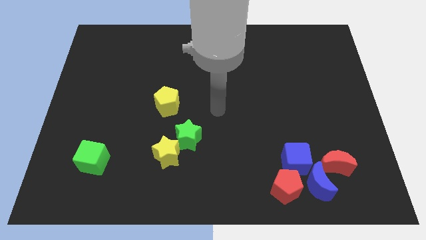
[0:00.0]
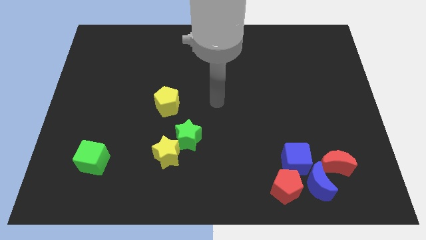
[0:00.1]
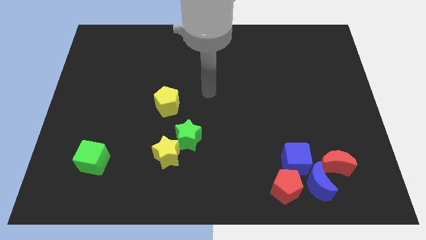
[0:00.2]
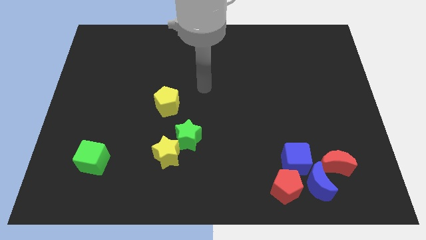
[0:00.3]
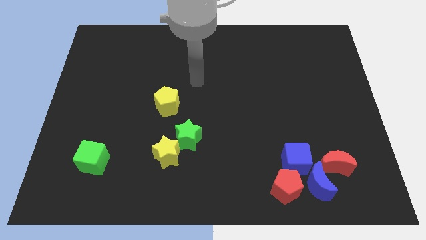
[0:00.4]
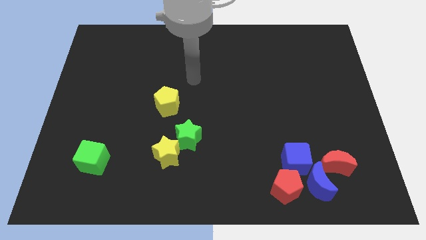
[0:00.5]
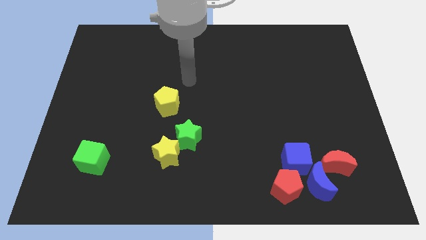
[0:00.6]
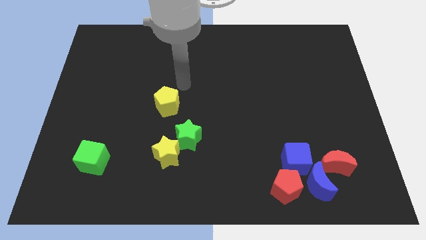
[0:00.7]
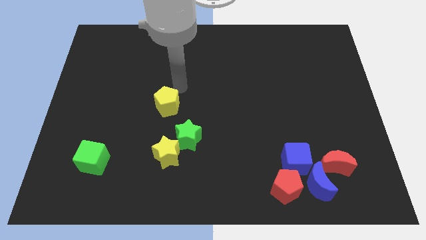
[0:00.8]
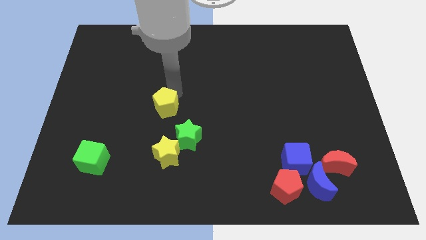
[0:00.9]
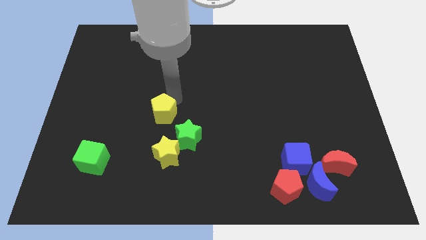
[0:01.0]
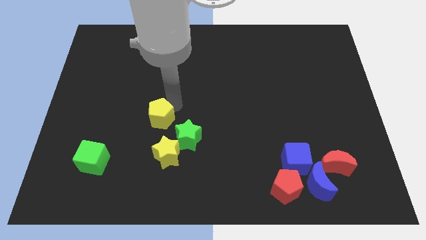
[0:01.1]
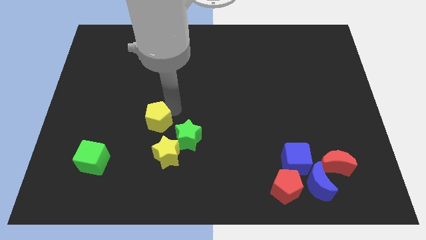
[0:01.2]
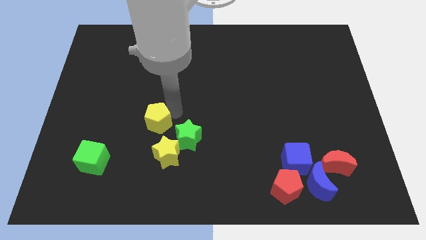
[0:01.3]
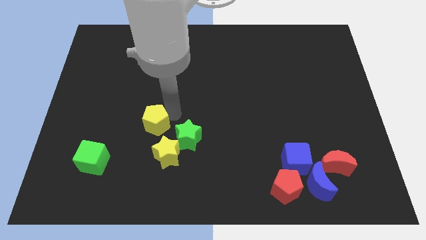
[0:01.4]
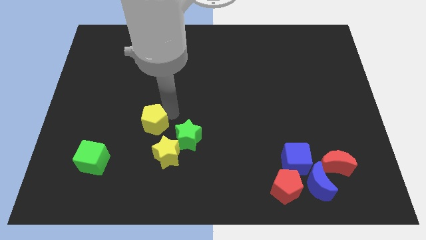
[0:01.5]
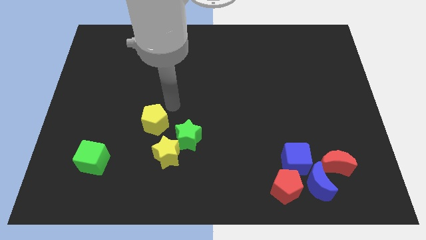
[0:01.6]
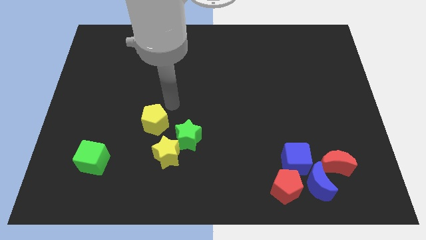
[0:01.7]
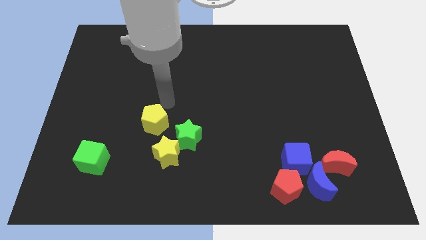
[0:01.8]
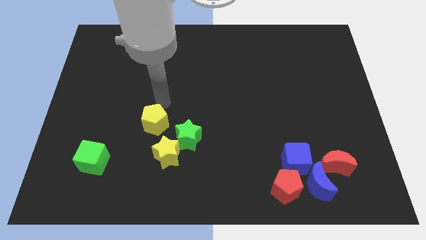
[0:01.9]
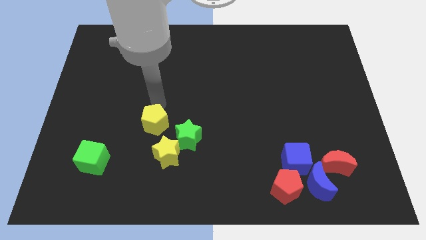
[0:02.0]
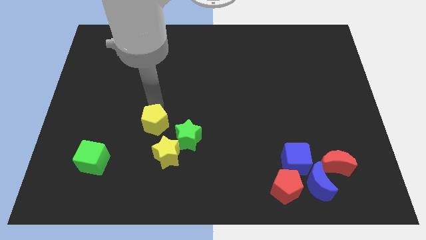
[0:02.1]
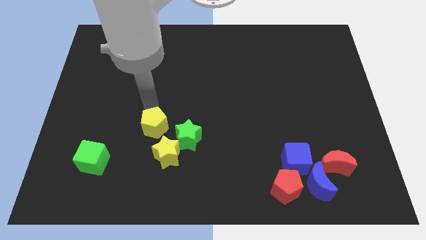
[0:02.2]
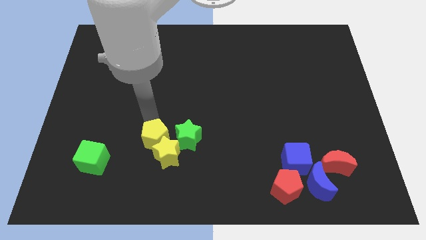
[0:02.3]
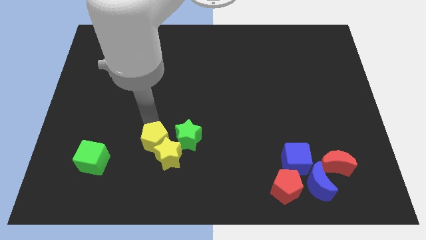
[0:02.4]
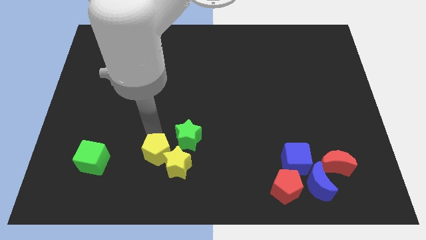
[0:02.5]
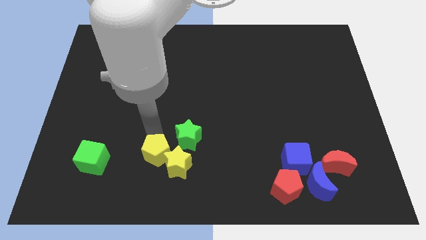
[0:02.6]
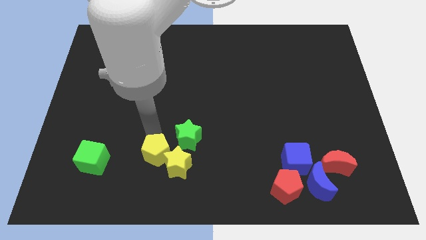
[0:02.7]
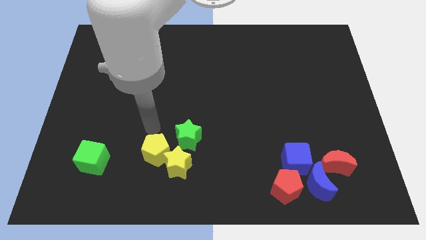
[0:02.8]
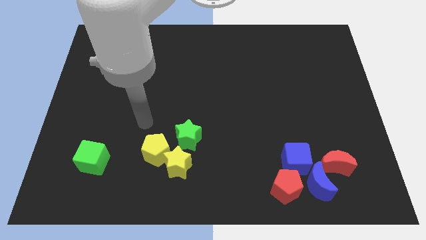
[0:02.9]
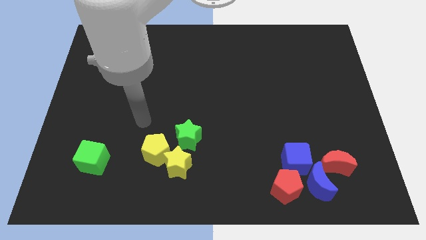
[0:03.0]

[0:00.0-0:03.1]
move the yellow pentagon into the yellow star

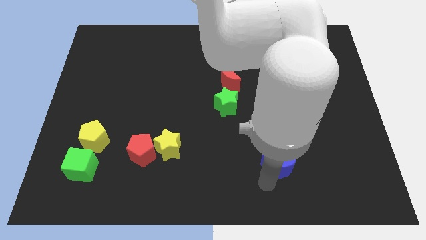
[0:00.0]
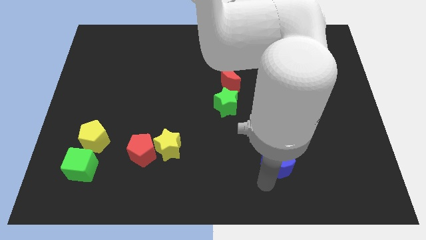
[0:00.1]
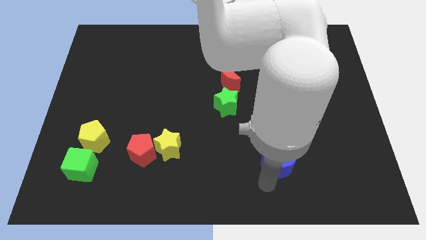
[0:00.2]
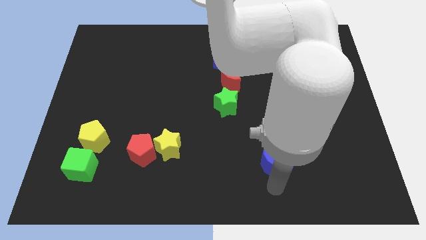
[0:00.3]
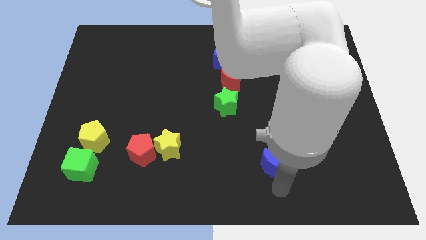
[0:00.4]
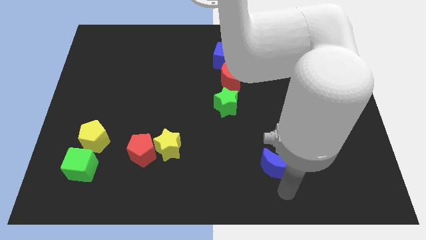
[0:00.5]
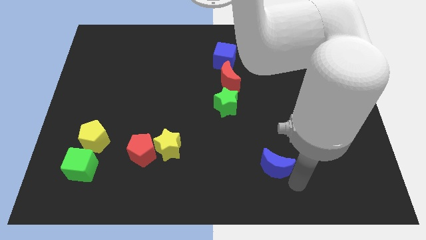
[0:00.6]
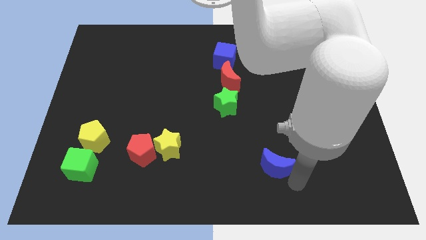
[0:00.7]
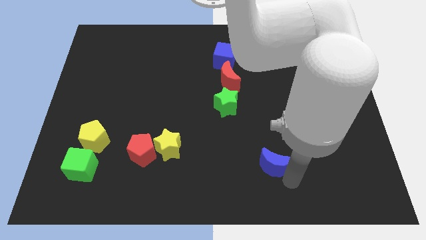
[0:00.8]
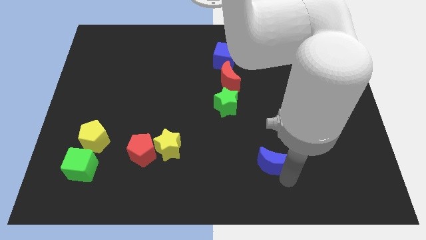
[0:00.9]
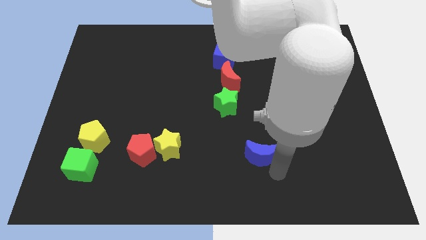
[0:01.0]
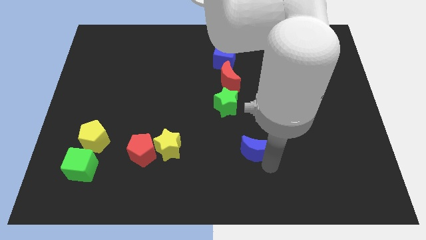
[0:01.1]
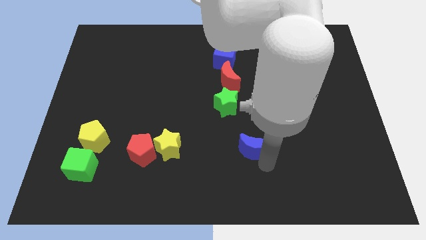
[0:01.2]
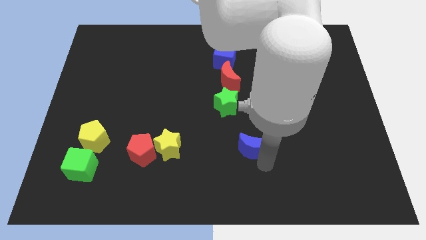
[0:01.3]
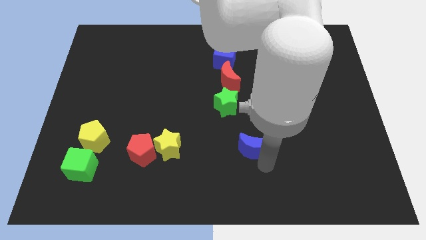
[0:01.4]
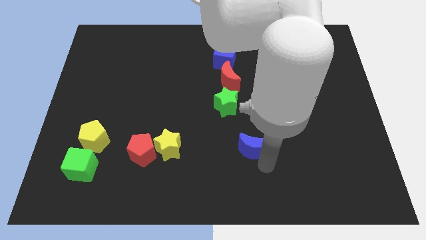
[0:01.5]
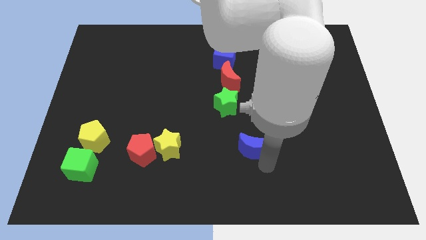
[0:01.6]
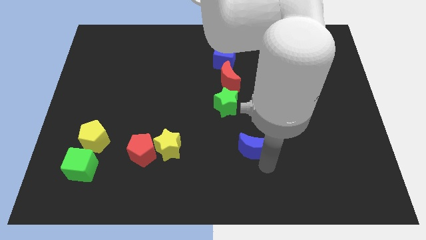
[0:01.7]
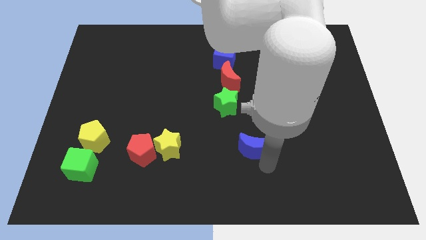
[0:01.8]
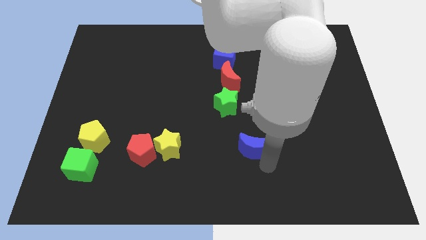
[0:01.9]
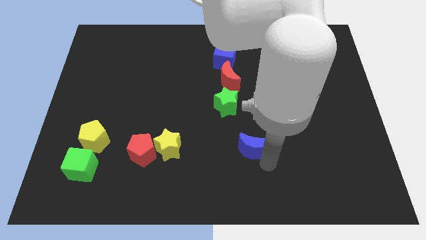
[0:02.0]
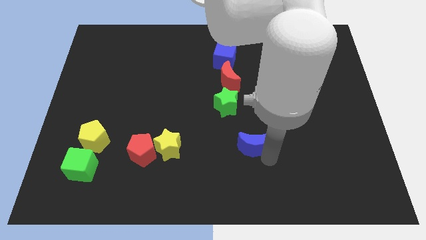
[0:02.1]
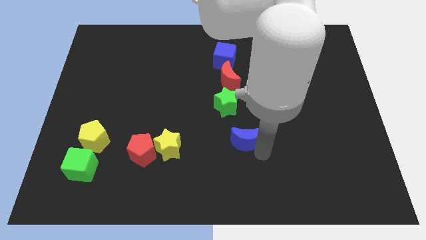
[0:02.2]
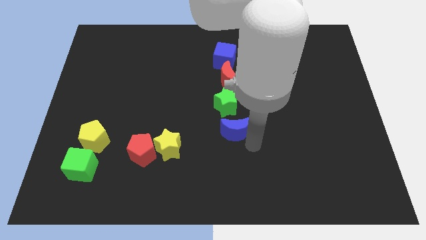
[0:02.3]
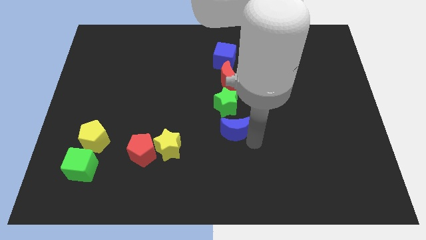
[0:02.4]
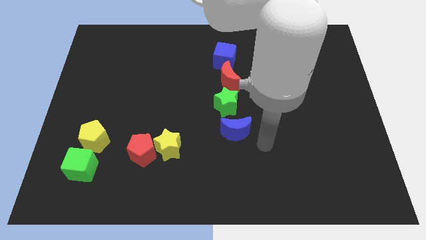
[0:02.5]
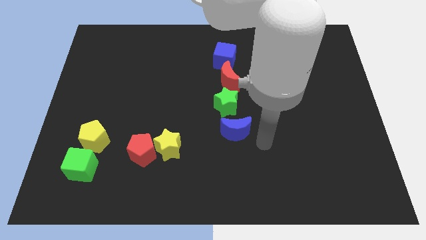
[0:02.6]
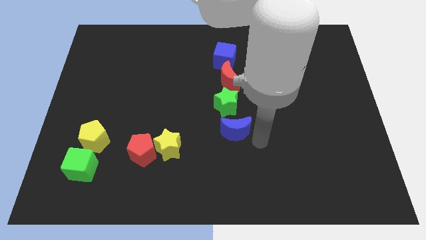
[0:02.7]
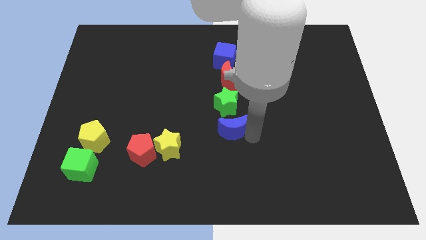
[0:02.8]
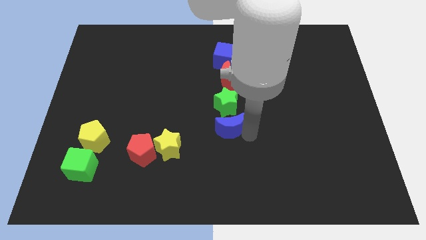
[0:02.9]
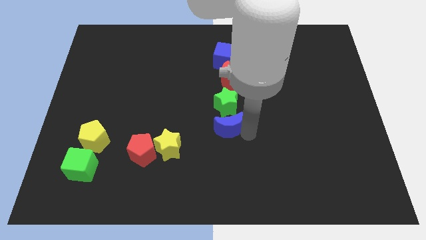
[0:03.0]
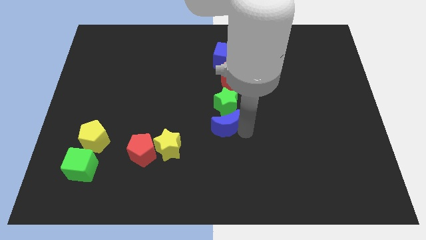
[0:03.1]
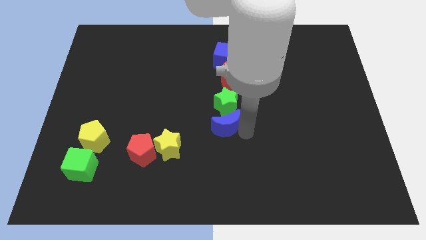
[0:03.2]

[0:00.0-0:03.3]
put the blue moon at the bottom of green star

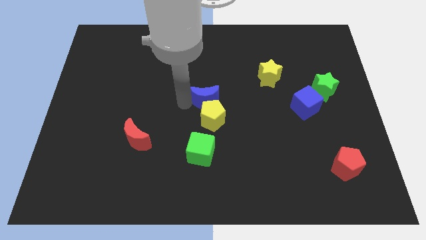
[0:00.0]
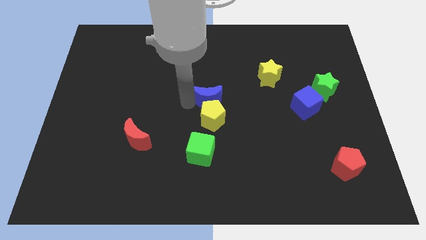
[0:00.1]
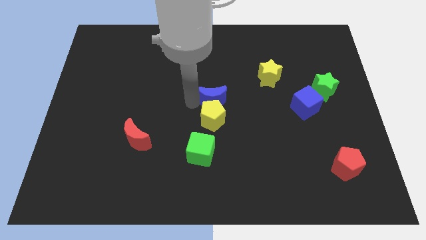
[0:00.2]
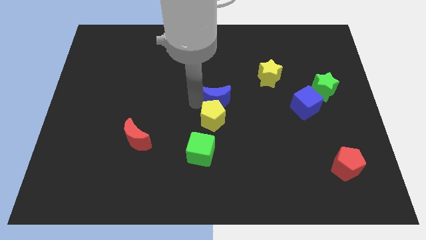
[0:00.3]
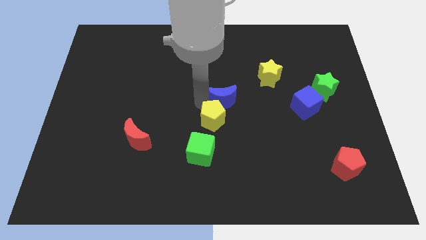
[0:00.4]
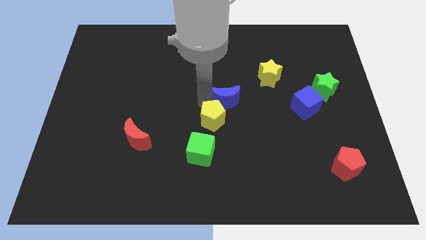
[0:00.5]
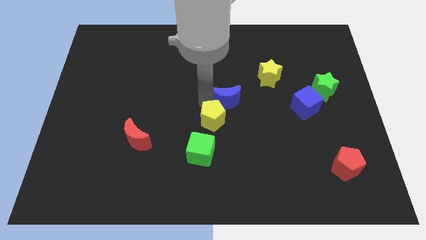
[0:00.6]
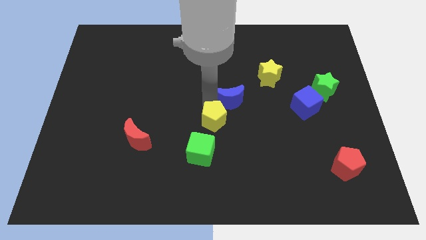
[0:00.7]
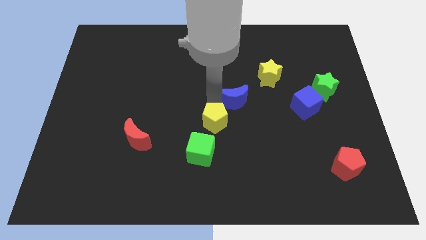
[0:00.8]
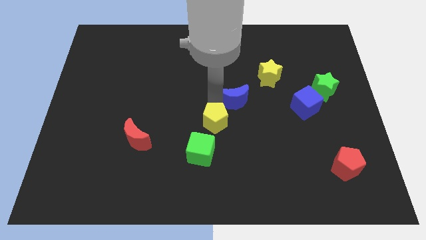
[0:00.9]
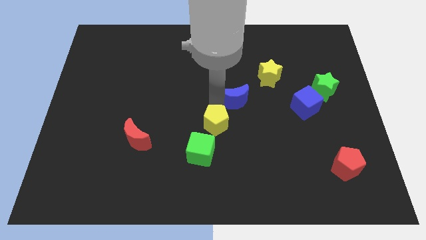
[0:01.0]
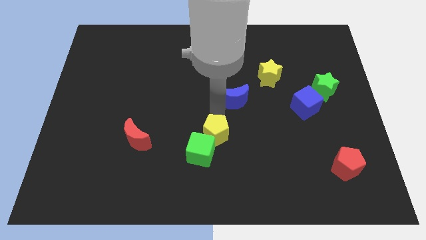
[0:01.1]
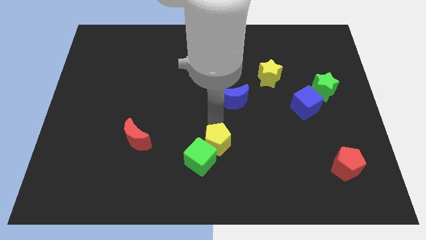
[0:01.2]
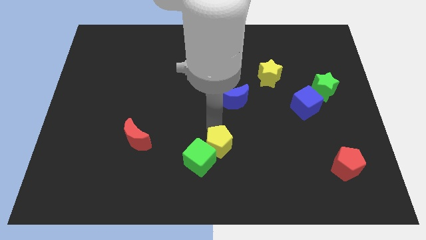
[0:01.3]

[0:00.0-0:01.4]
push yellow pentagon into green cube

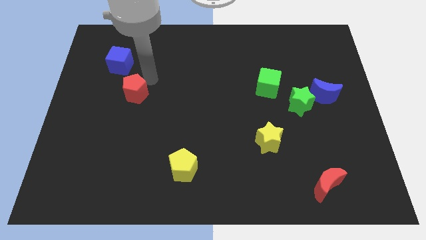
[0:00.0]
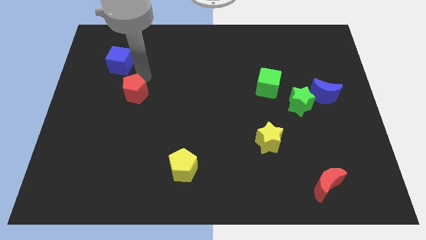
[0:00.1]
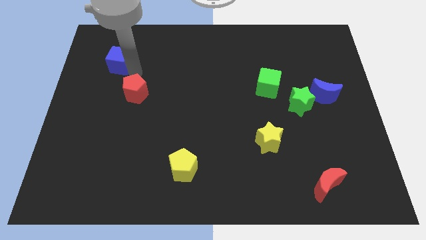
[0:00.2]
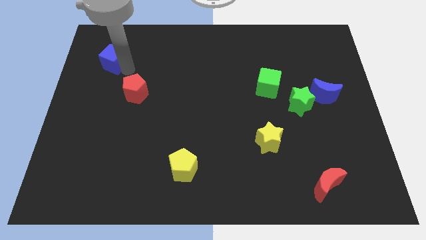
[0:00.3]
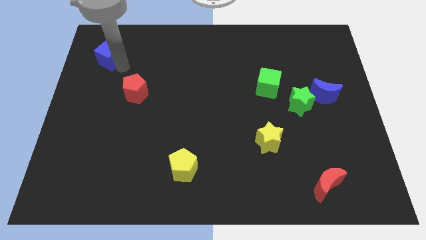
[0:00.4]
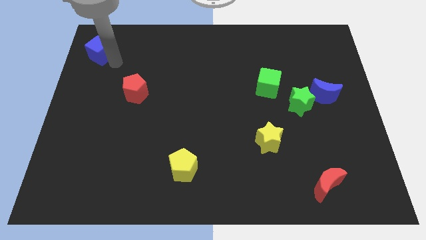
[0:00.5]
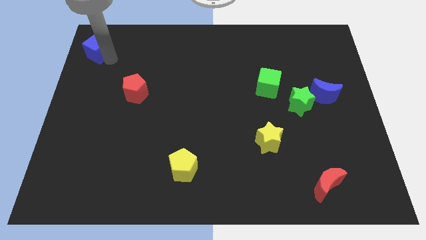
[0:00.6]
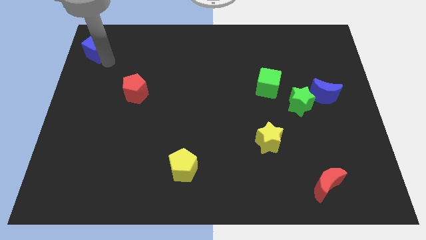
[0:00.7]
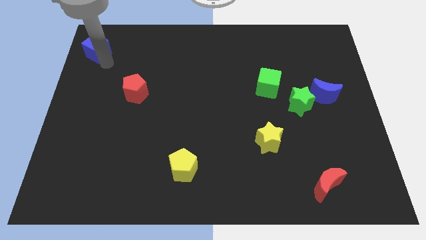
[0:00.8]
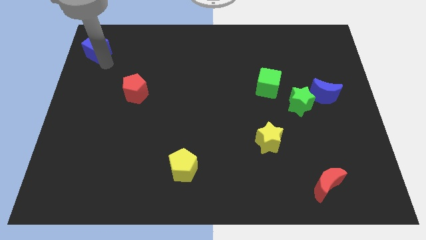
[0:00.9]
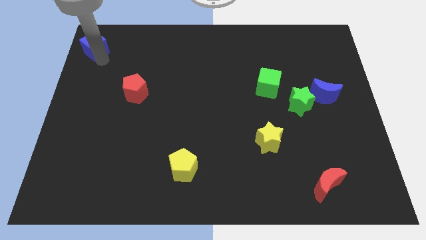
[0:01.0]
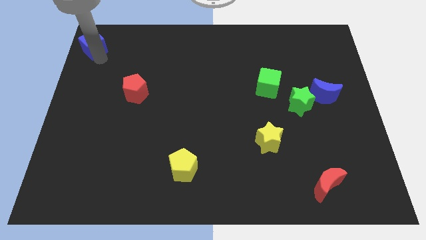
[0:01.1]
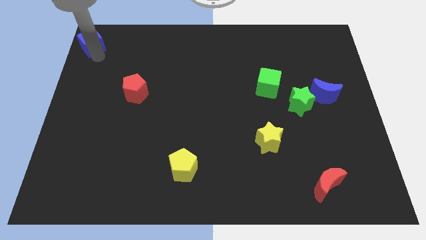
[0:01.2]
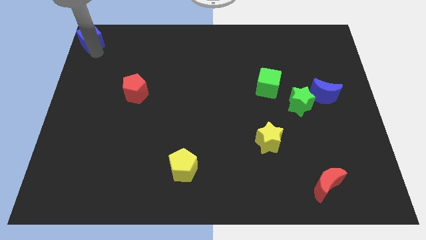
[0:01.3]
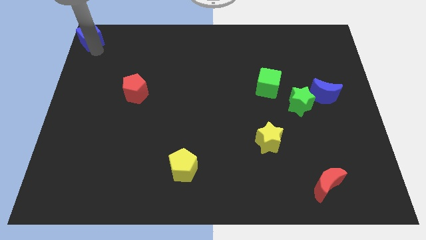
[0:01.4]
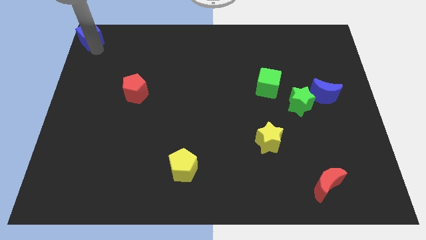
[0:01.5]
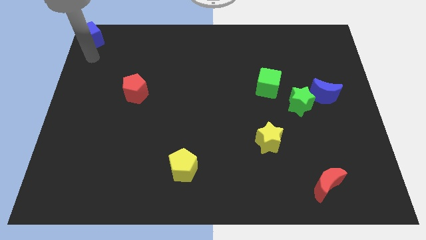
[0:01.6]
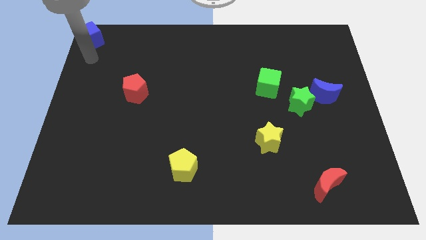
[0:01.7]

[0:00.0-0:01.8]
push the blue cube towards top right corner
